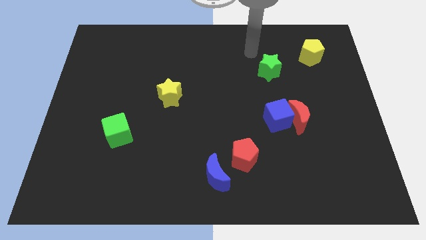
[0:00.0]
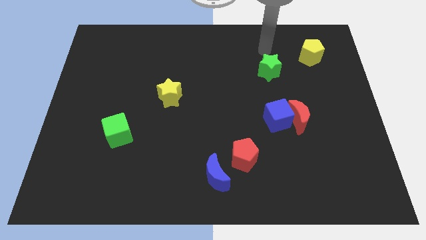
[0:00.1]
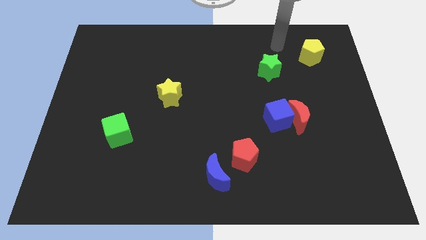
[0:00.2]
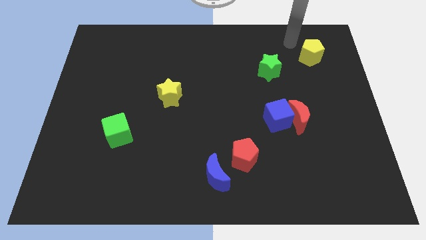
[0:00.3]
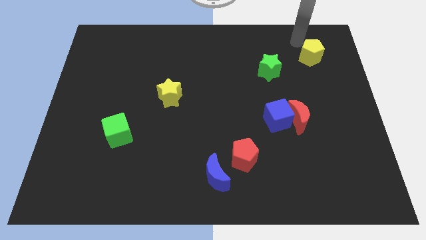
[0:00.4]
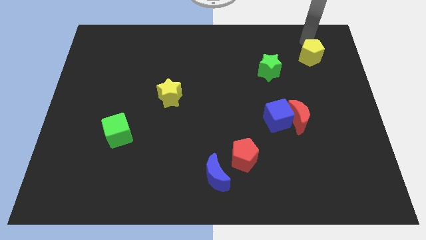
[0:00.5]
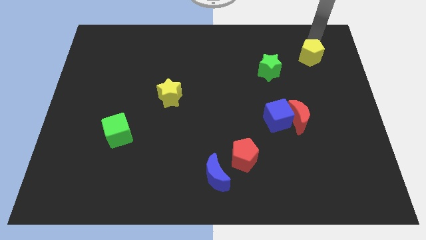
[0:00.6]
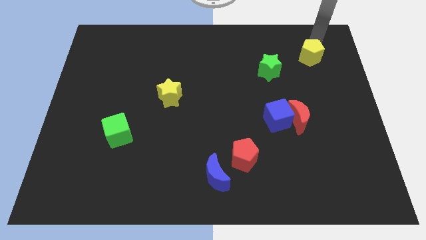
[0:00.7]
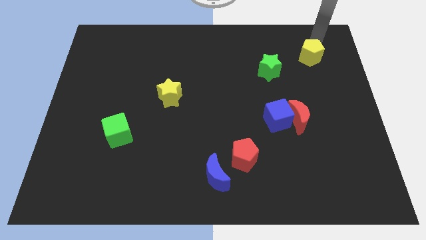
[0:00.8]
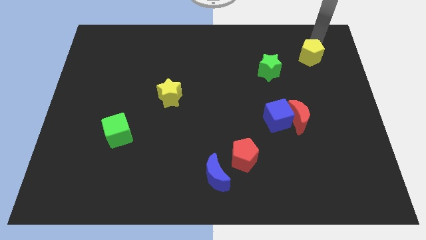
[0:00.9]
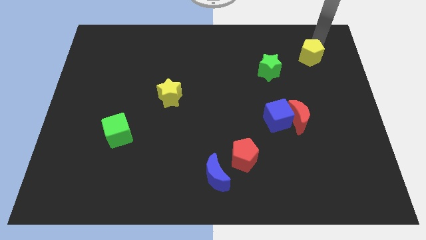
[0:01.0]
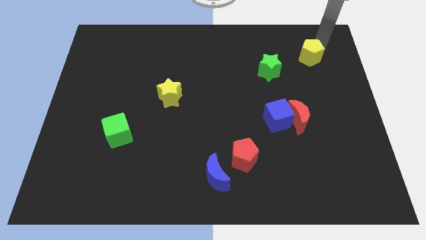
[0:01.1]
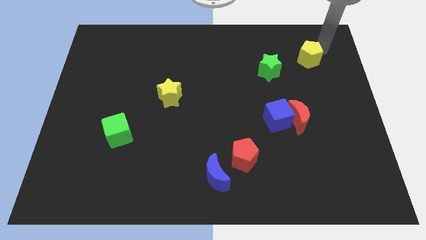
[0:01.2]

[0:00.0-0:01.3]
move the arm towards the top right side of the yellow pentagon

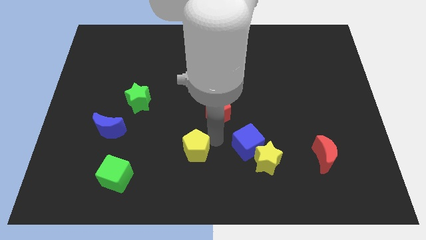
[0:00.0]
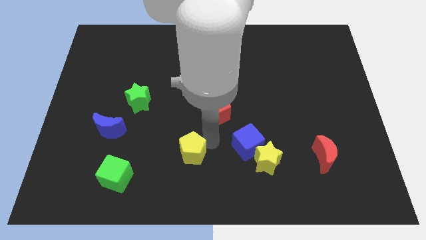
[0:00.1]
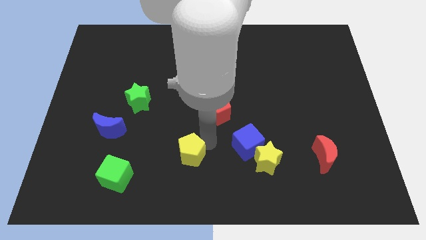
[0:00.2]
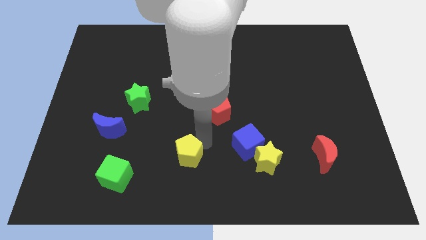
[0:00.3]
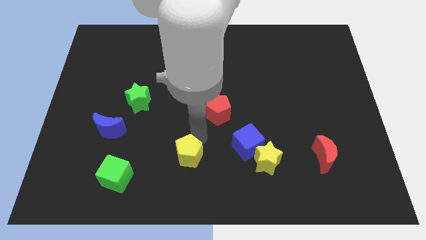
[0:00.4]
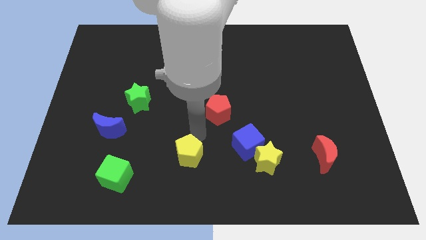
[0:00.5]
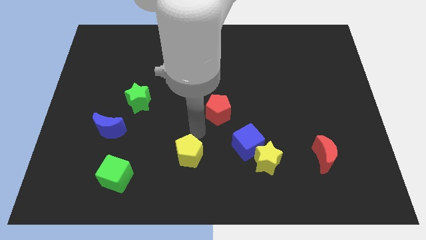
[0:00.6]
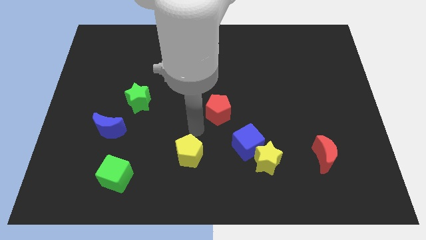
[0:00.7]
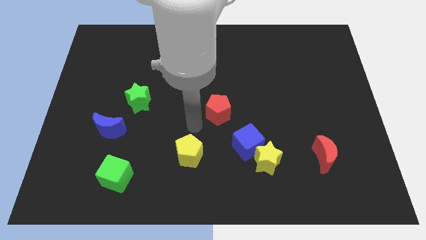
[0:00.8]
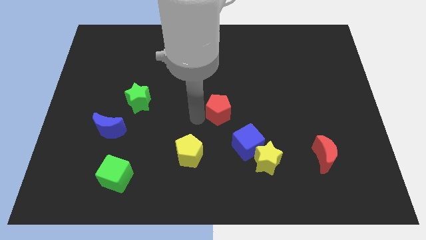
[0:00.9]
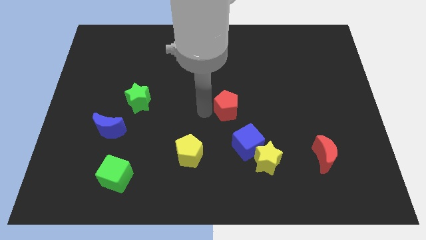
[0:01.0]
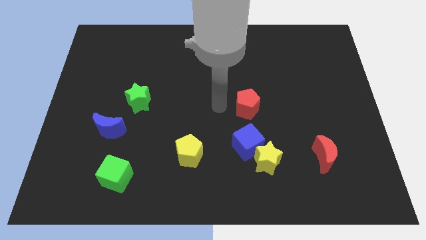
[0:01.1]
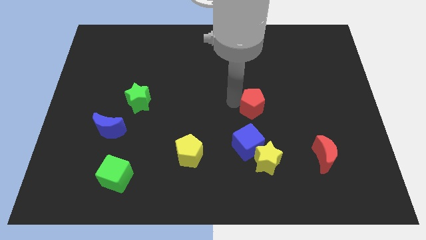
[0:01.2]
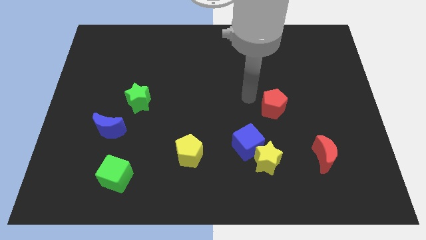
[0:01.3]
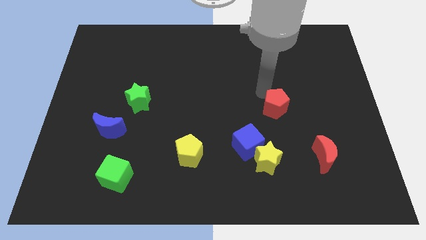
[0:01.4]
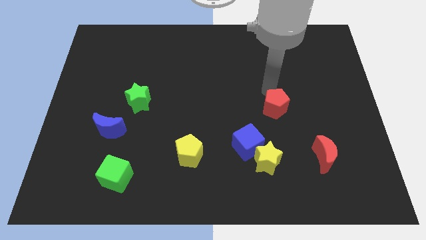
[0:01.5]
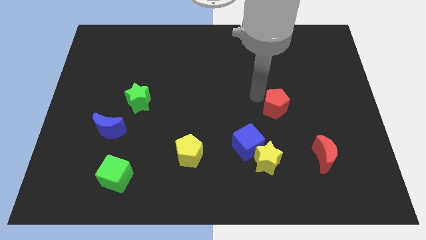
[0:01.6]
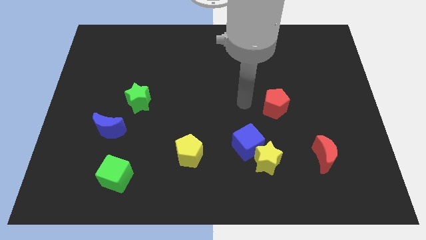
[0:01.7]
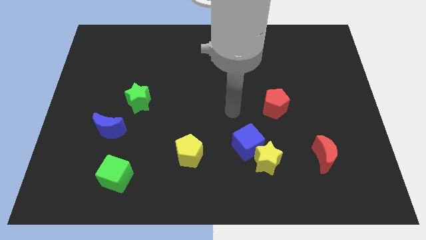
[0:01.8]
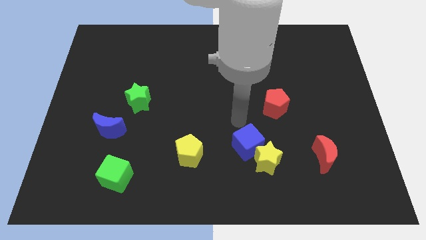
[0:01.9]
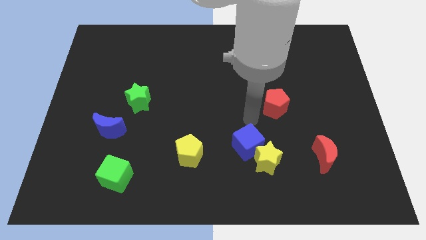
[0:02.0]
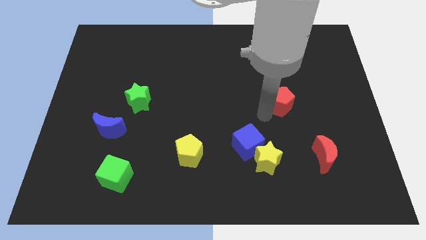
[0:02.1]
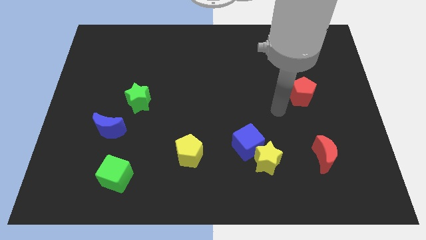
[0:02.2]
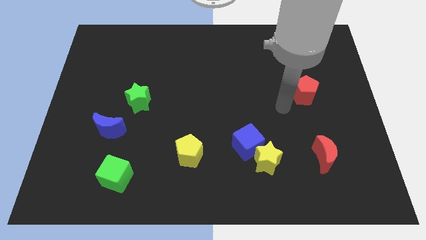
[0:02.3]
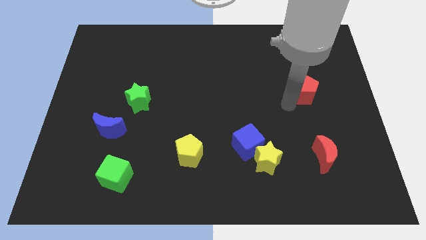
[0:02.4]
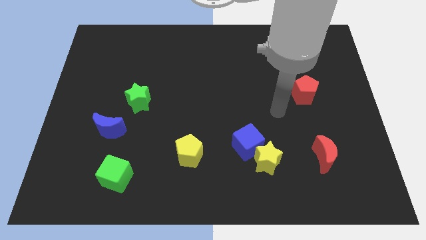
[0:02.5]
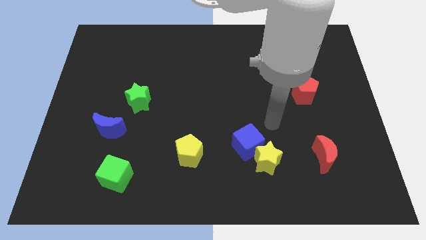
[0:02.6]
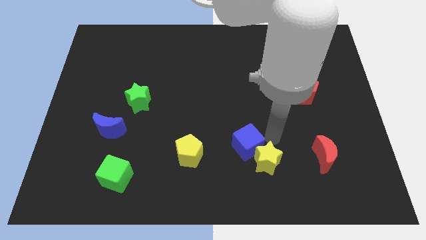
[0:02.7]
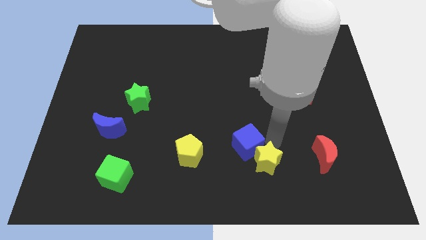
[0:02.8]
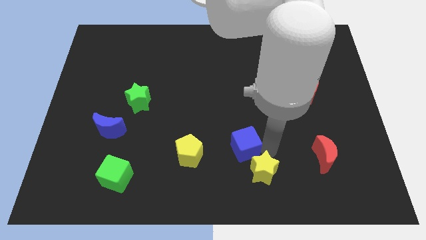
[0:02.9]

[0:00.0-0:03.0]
place your arm towards the top side of the yellow star

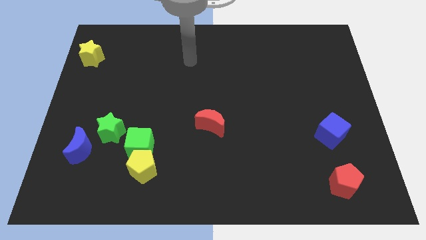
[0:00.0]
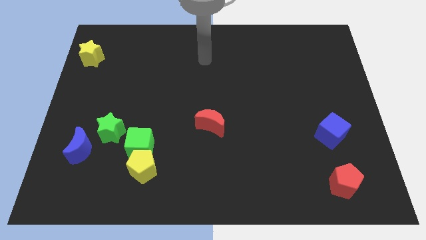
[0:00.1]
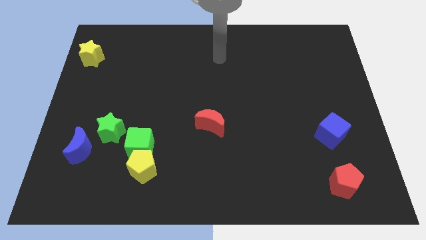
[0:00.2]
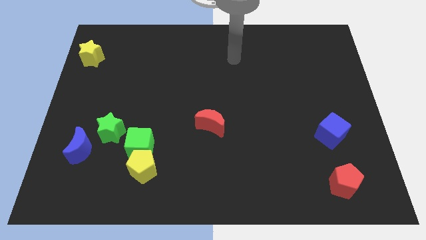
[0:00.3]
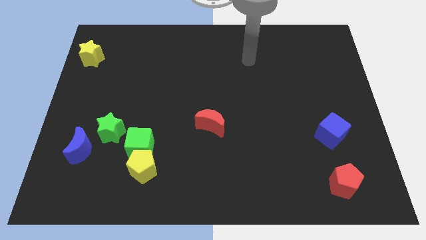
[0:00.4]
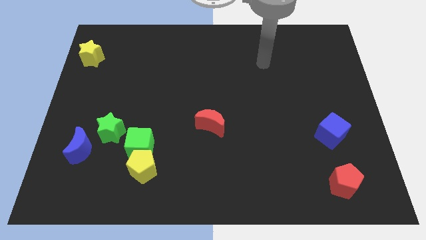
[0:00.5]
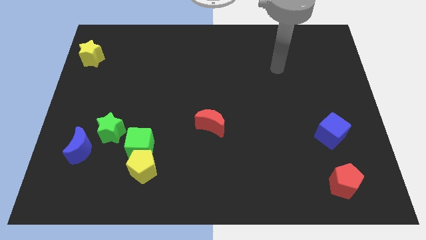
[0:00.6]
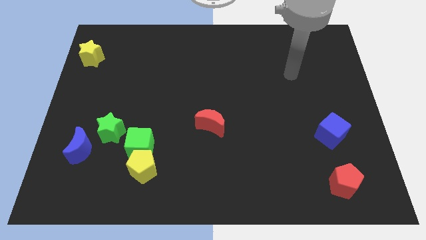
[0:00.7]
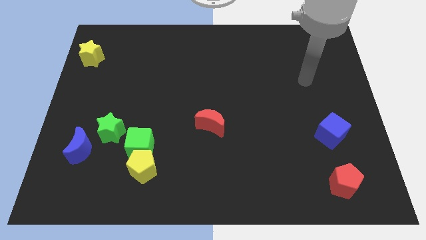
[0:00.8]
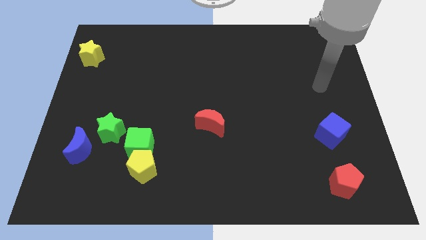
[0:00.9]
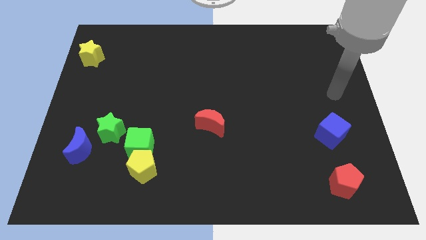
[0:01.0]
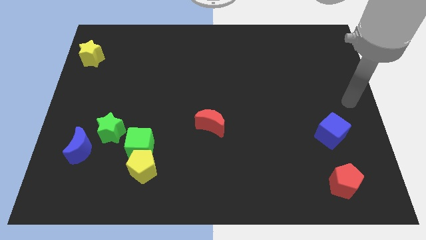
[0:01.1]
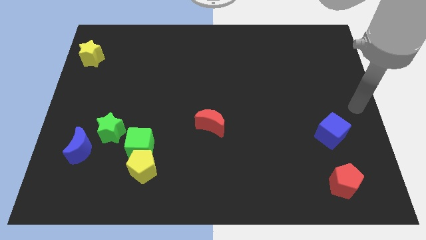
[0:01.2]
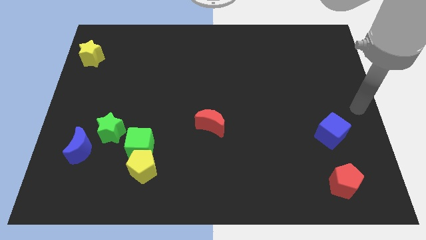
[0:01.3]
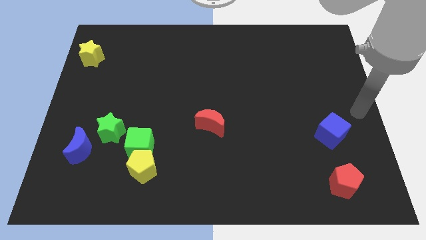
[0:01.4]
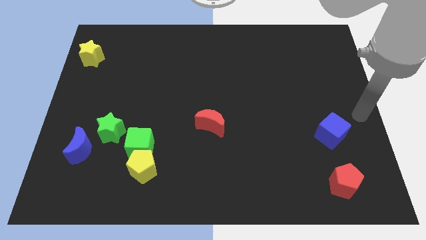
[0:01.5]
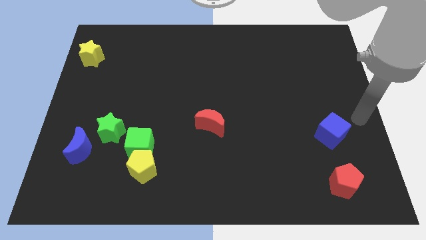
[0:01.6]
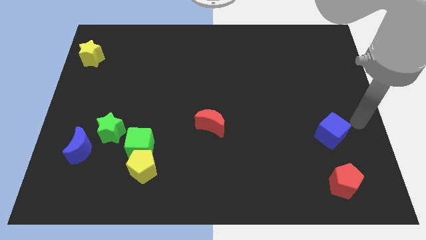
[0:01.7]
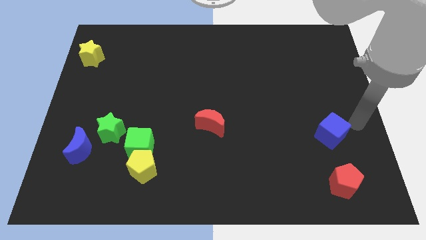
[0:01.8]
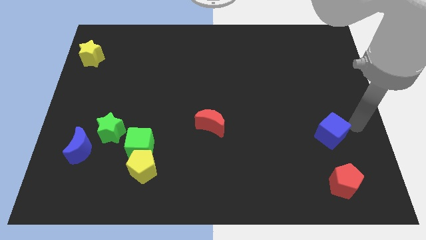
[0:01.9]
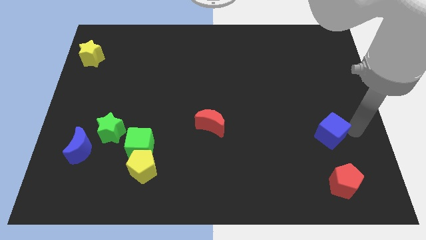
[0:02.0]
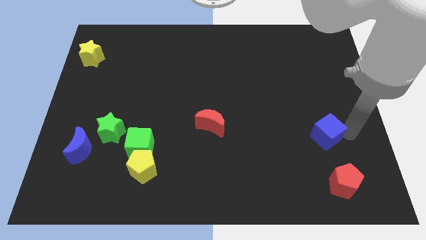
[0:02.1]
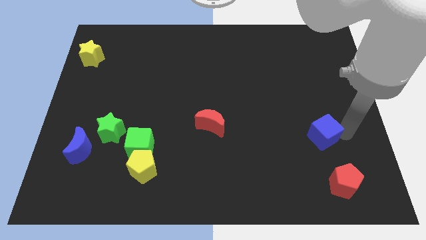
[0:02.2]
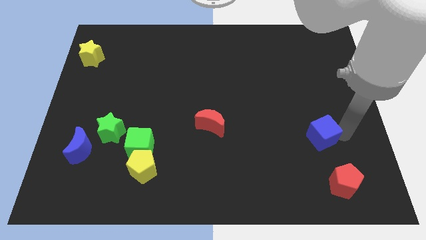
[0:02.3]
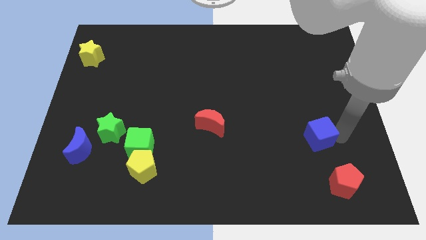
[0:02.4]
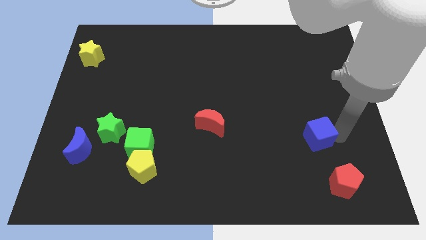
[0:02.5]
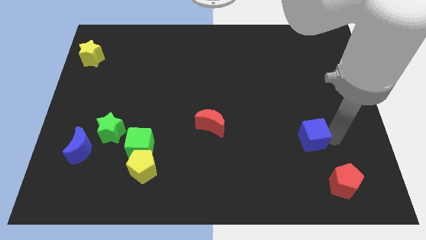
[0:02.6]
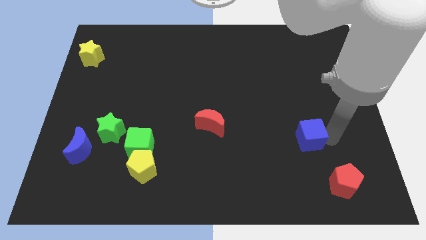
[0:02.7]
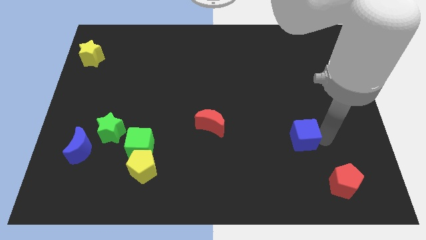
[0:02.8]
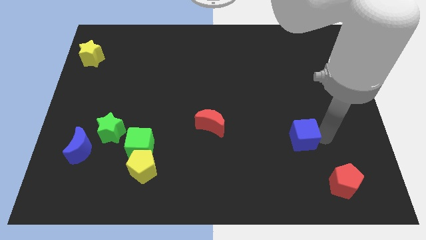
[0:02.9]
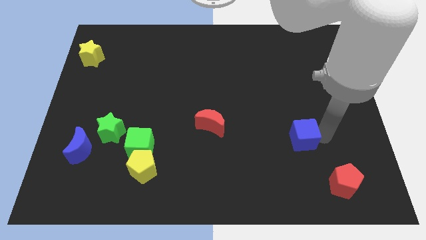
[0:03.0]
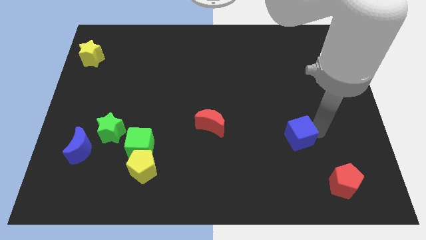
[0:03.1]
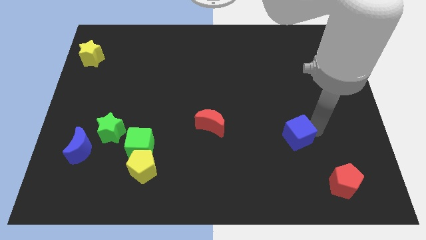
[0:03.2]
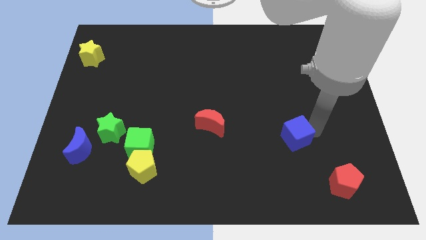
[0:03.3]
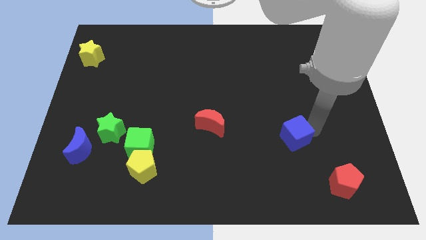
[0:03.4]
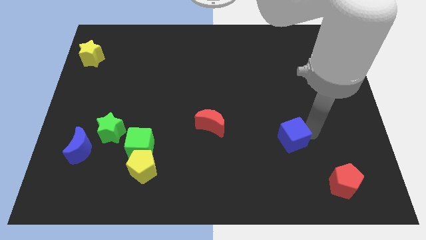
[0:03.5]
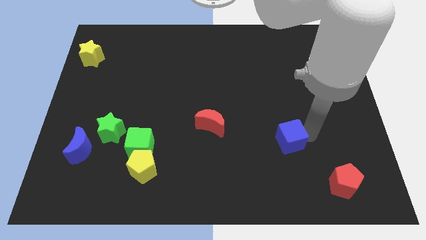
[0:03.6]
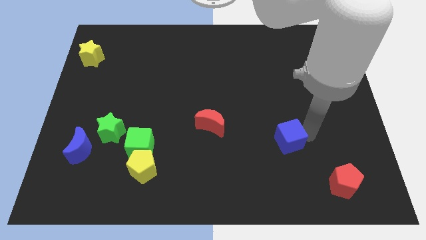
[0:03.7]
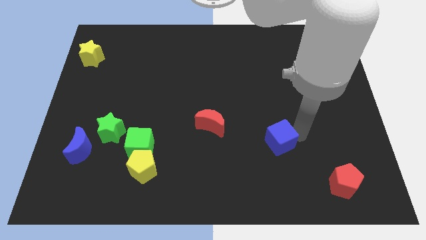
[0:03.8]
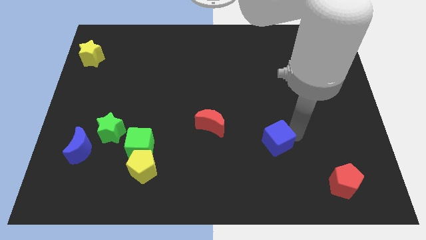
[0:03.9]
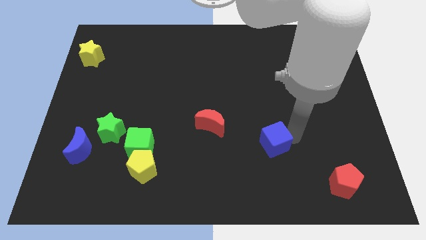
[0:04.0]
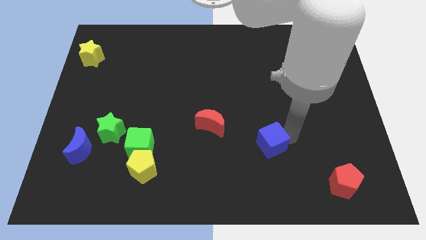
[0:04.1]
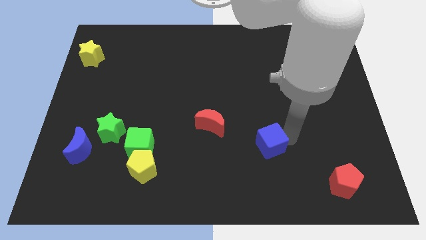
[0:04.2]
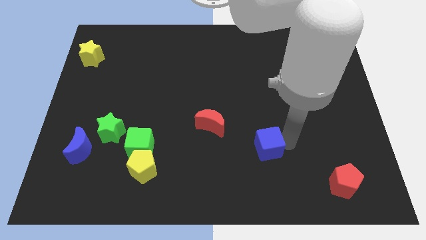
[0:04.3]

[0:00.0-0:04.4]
move the blue cube towards the left side

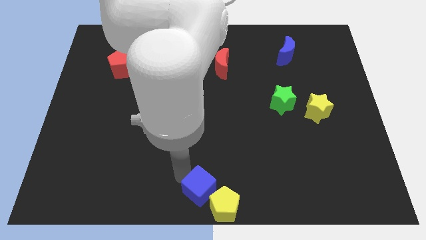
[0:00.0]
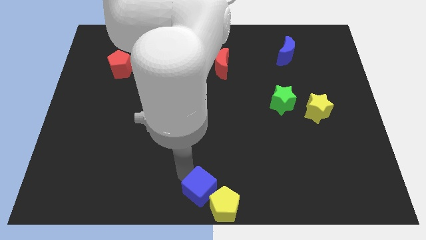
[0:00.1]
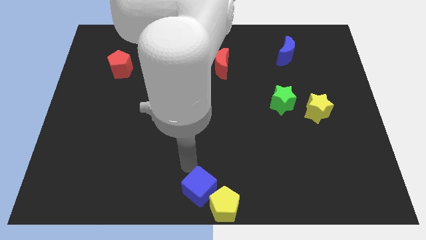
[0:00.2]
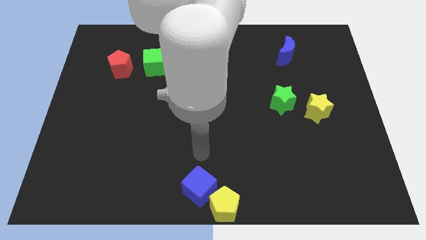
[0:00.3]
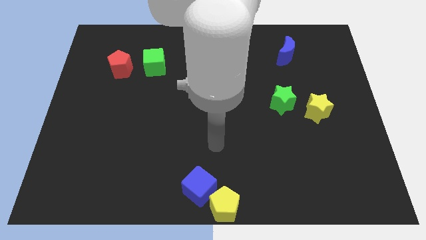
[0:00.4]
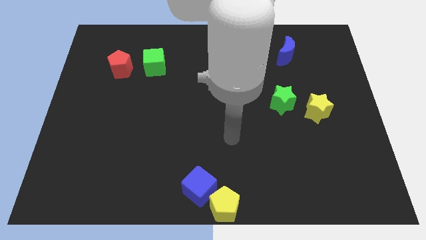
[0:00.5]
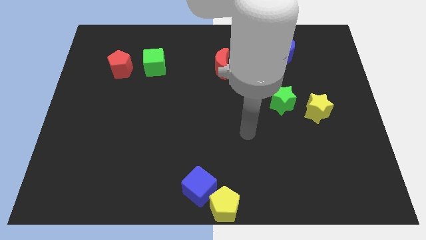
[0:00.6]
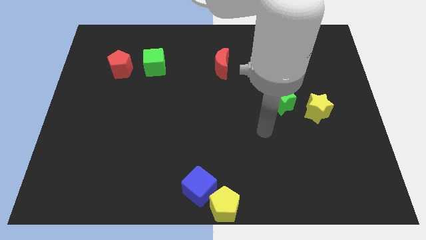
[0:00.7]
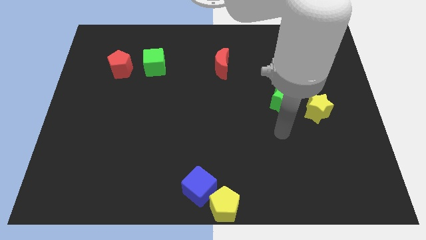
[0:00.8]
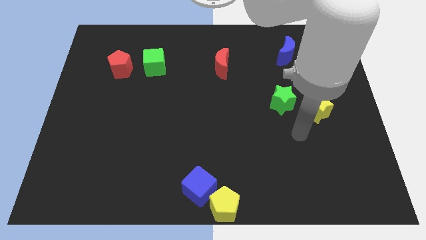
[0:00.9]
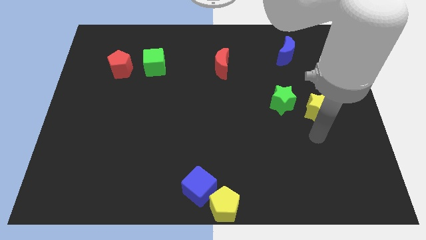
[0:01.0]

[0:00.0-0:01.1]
move your arm away from blue cube
